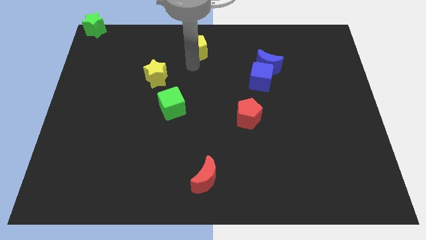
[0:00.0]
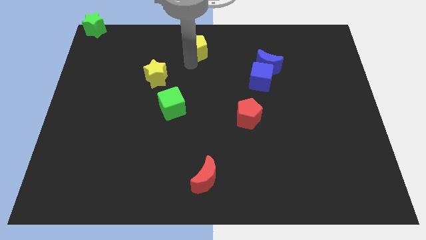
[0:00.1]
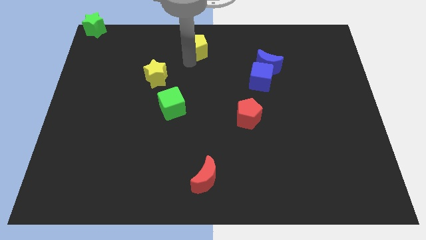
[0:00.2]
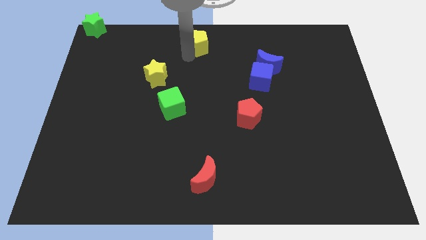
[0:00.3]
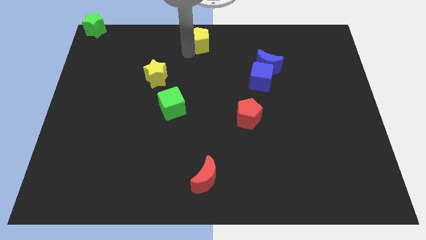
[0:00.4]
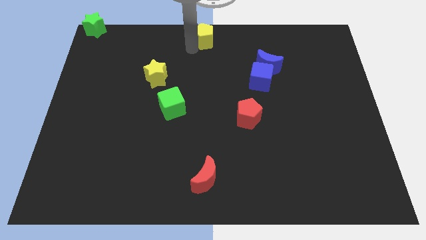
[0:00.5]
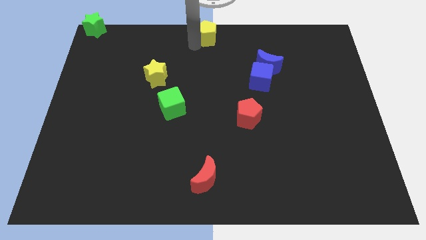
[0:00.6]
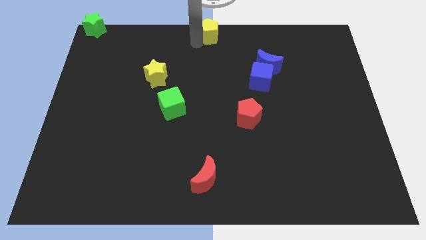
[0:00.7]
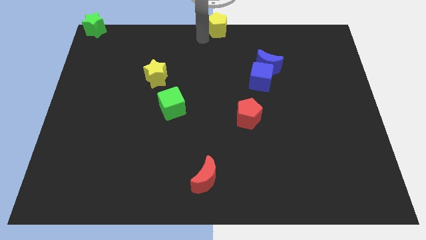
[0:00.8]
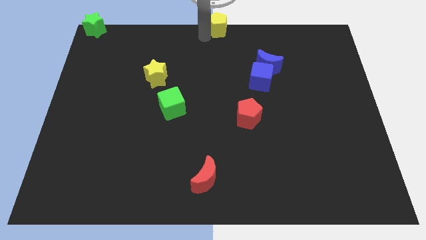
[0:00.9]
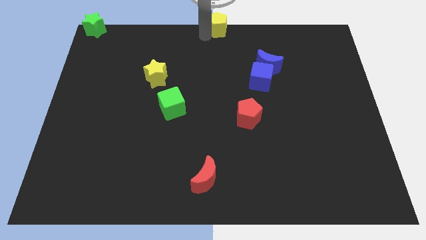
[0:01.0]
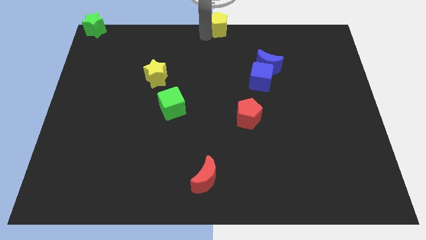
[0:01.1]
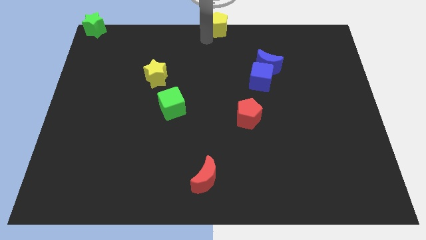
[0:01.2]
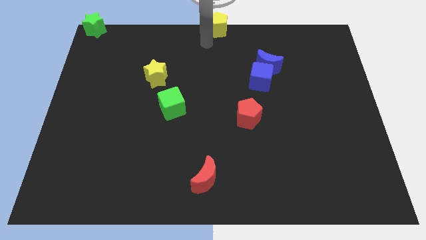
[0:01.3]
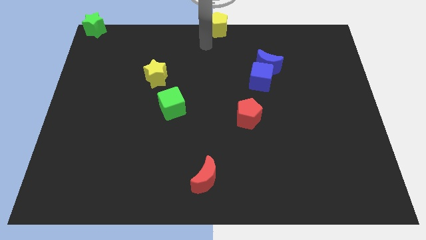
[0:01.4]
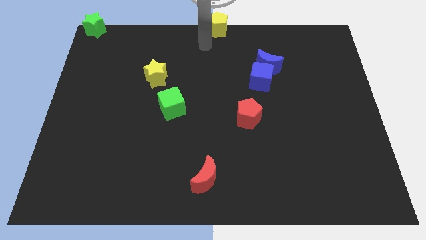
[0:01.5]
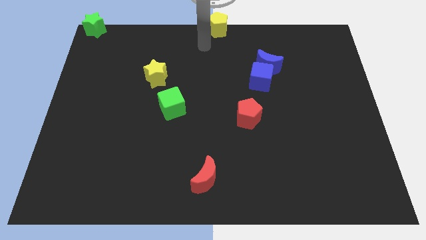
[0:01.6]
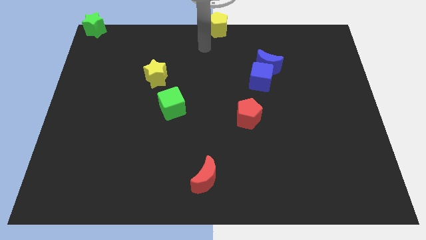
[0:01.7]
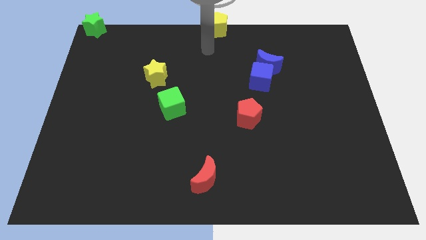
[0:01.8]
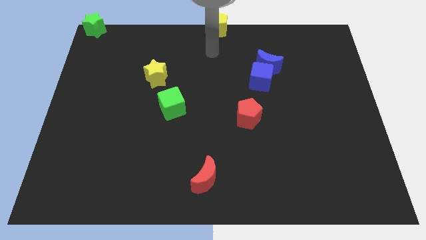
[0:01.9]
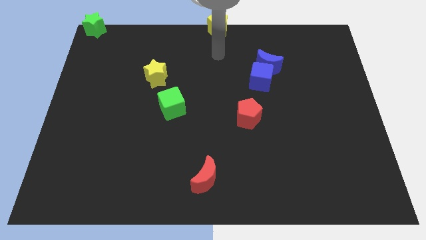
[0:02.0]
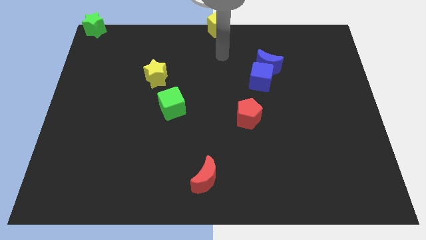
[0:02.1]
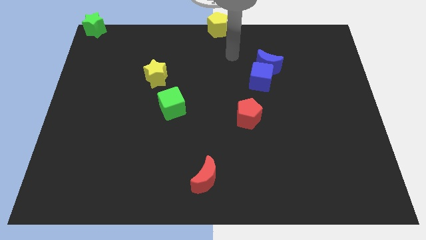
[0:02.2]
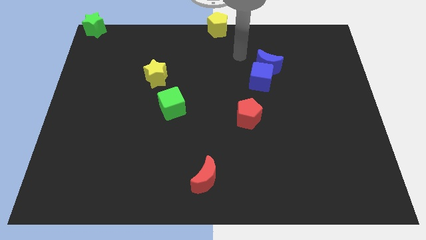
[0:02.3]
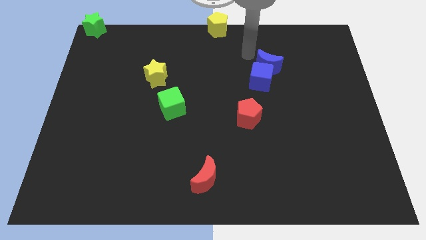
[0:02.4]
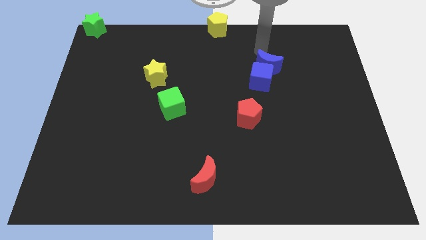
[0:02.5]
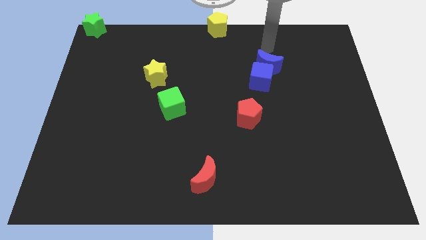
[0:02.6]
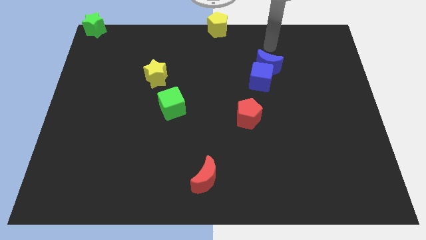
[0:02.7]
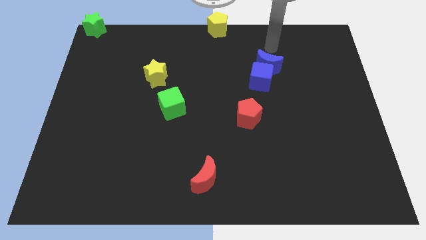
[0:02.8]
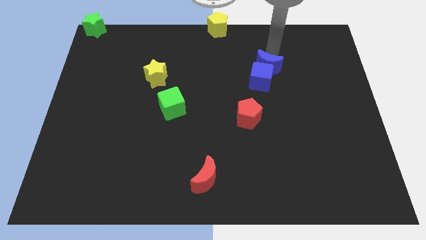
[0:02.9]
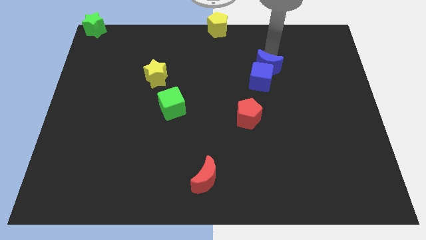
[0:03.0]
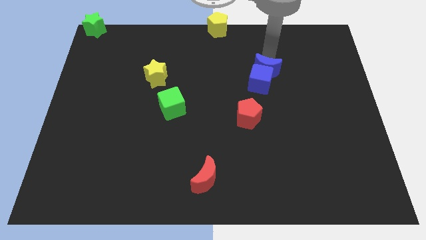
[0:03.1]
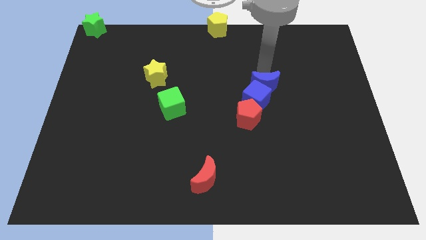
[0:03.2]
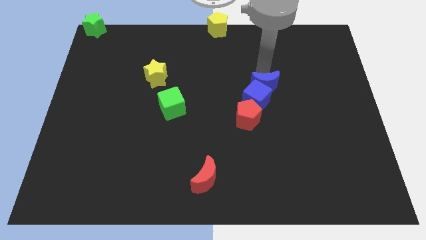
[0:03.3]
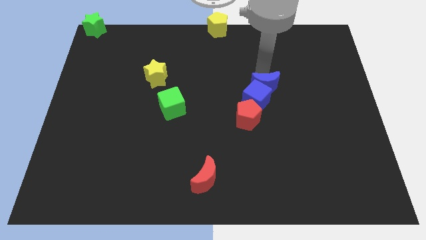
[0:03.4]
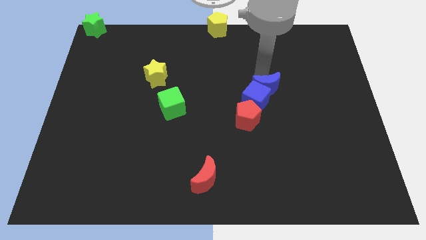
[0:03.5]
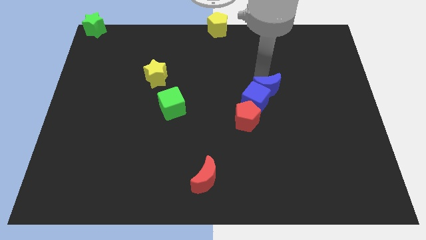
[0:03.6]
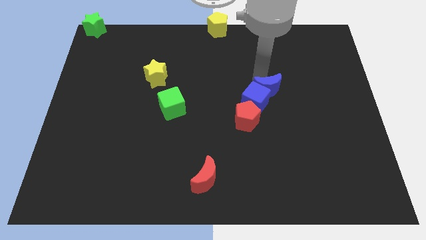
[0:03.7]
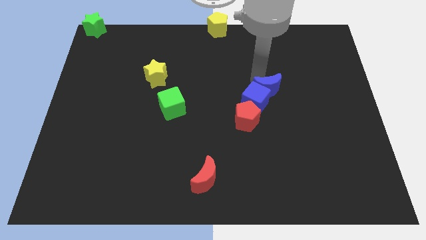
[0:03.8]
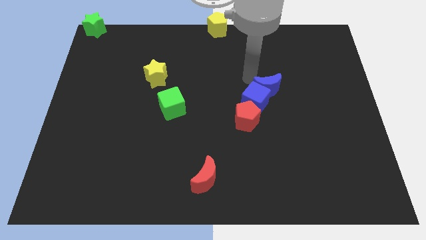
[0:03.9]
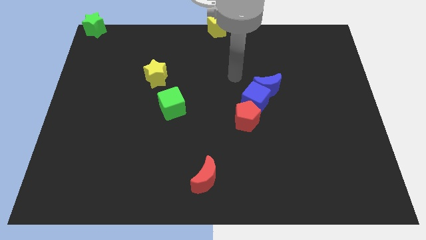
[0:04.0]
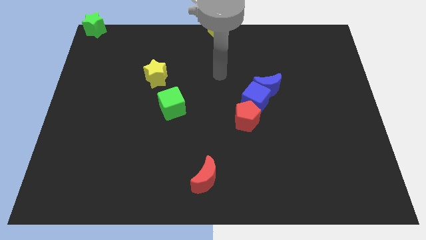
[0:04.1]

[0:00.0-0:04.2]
push the blue cube into the red pentagon with the blue moon

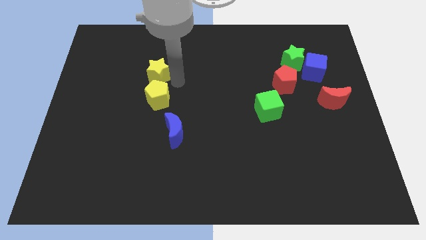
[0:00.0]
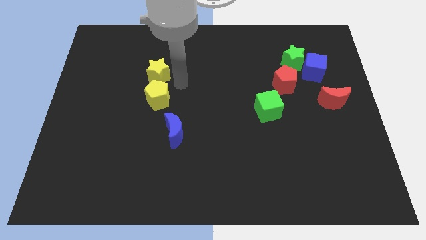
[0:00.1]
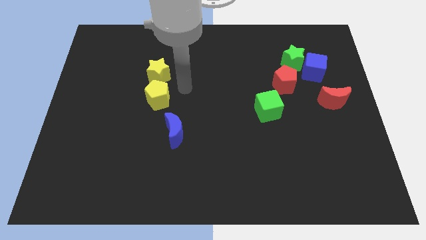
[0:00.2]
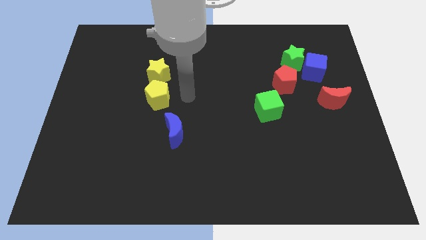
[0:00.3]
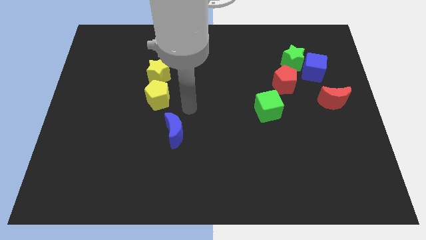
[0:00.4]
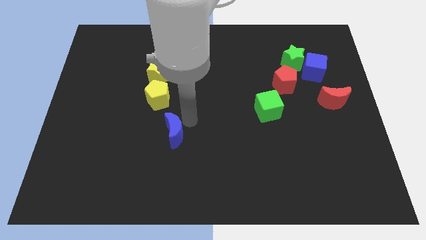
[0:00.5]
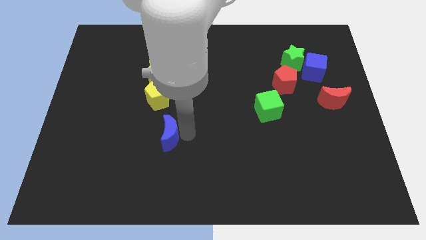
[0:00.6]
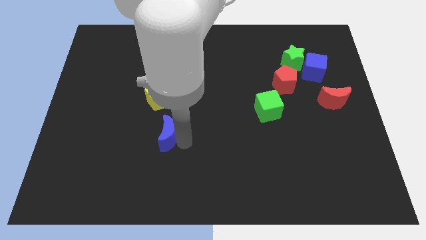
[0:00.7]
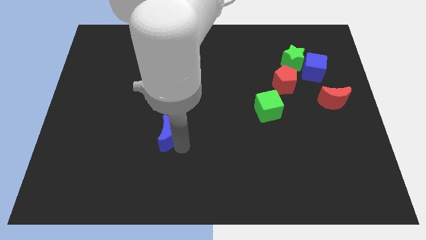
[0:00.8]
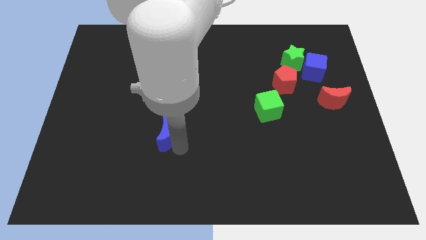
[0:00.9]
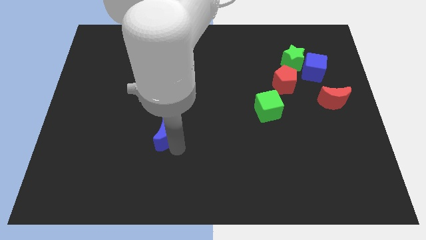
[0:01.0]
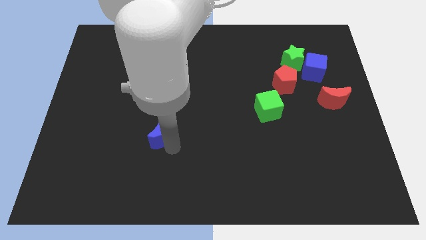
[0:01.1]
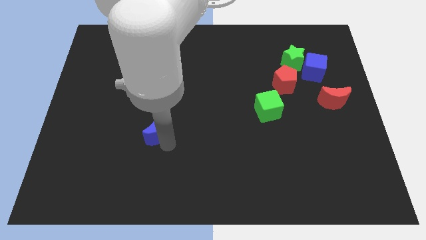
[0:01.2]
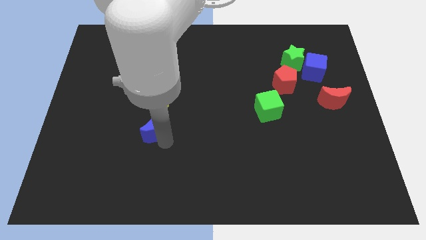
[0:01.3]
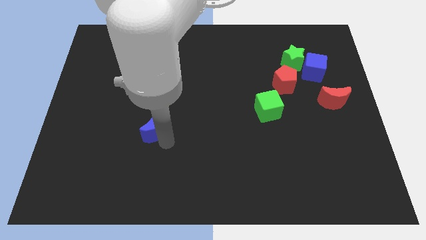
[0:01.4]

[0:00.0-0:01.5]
place the blue crescent below to the yellow pentagon

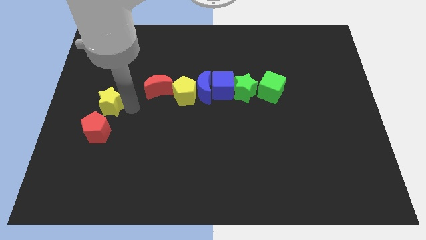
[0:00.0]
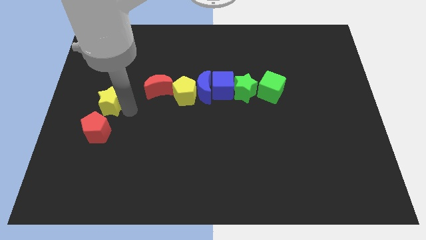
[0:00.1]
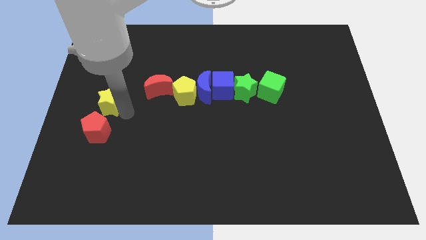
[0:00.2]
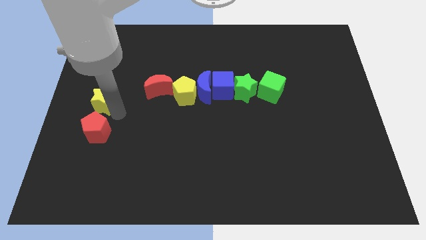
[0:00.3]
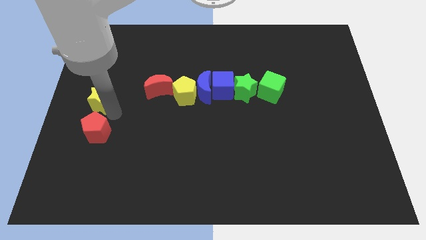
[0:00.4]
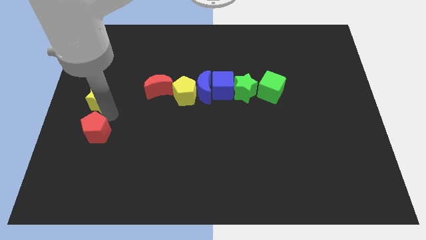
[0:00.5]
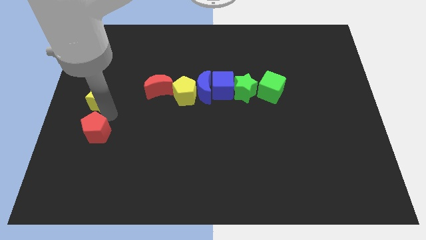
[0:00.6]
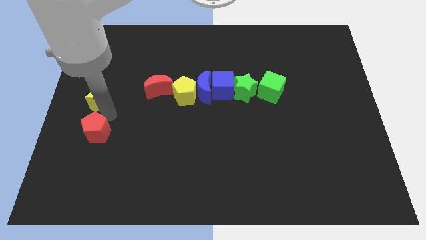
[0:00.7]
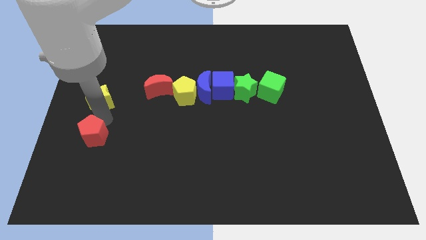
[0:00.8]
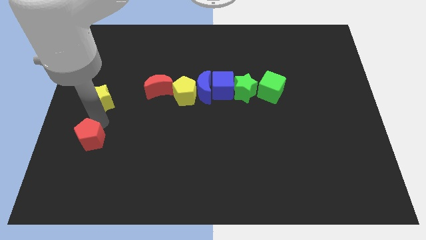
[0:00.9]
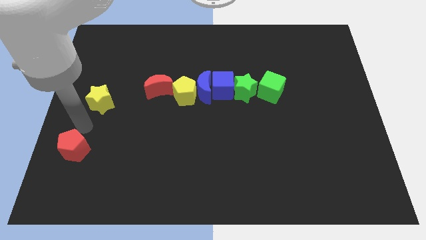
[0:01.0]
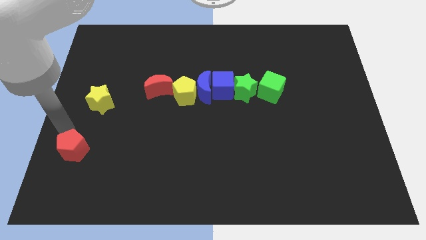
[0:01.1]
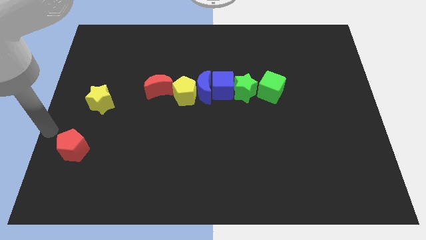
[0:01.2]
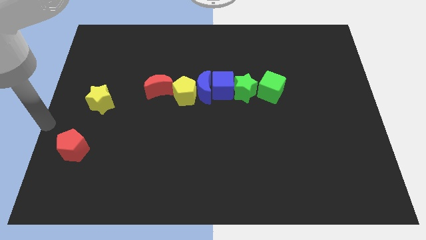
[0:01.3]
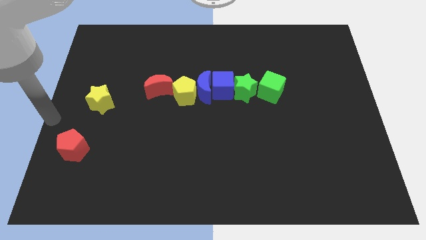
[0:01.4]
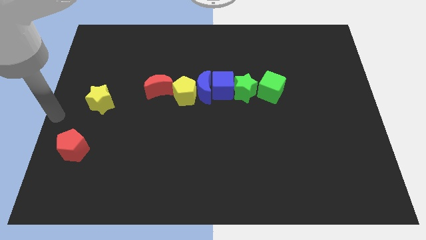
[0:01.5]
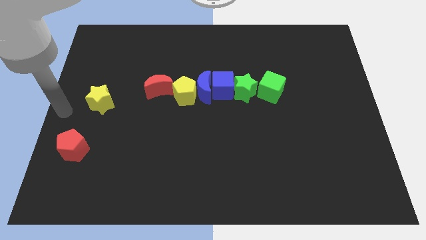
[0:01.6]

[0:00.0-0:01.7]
separate the yellow star and the red pentagon

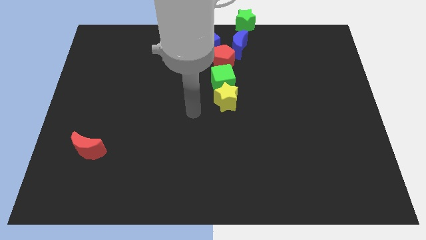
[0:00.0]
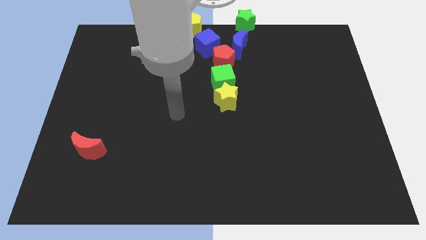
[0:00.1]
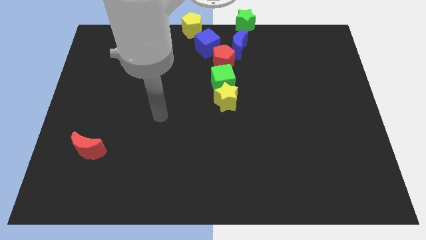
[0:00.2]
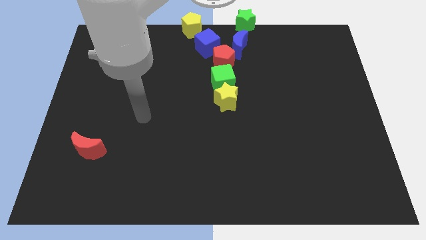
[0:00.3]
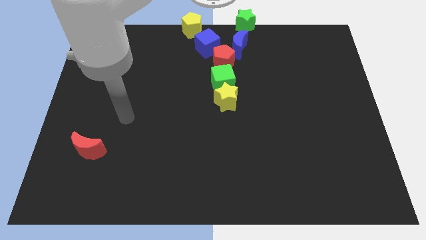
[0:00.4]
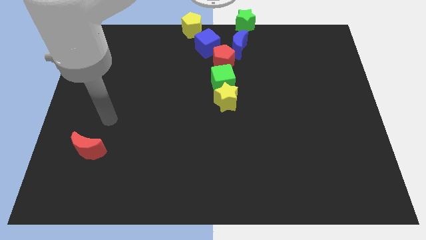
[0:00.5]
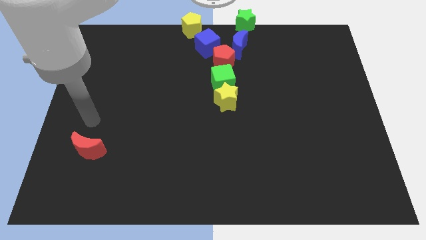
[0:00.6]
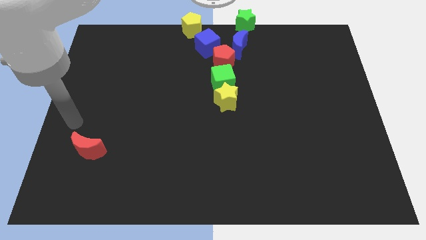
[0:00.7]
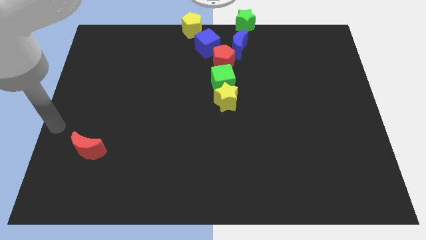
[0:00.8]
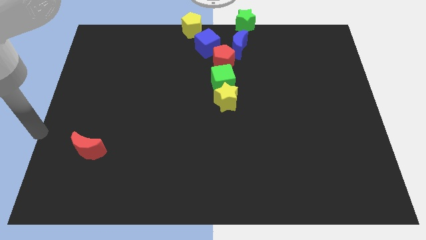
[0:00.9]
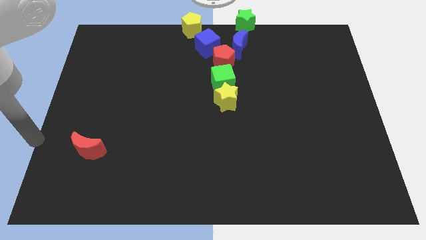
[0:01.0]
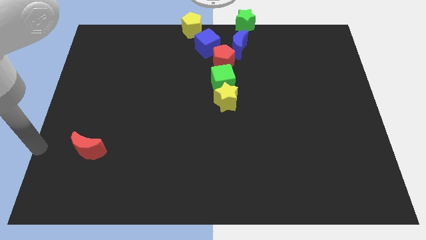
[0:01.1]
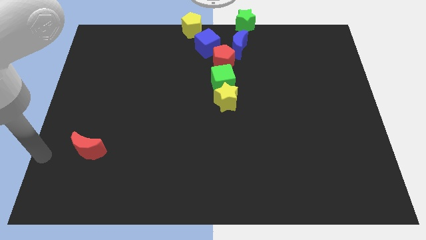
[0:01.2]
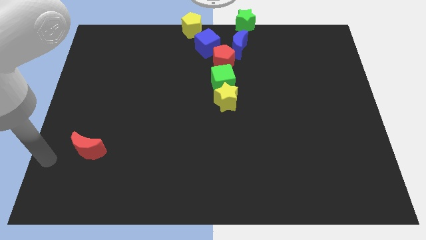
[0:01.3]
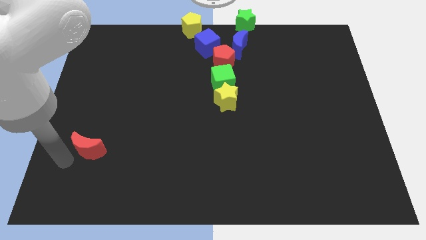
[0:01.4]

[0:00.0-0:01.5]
move the arm to the bottom left of the red moon

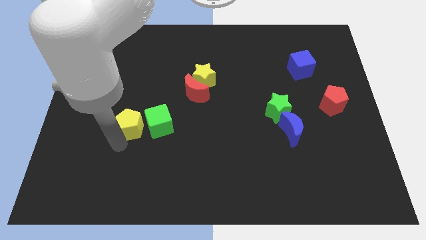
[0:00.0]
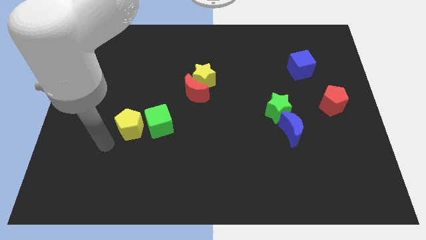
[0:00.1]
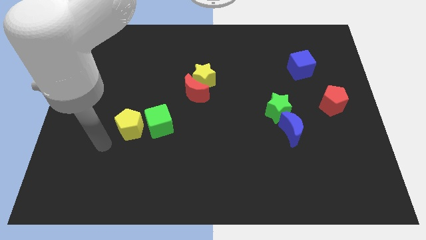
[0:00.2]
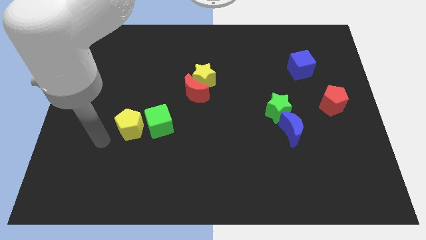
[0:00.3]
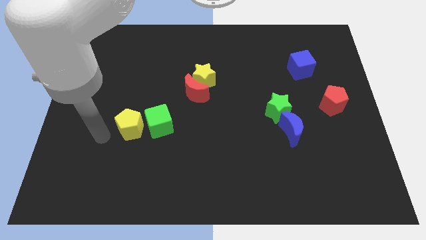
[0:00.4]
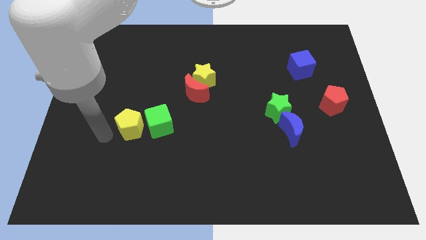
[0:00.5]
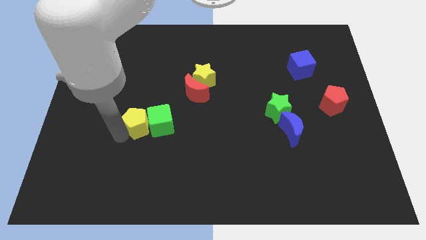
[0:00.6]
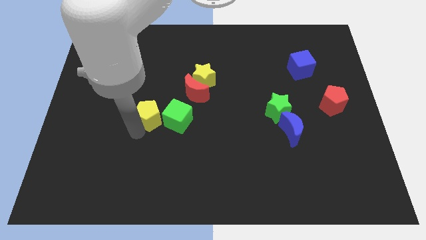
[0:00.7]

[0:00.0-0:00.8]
push the yellow pentagon into the green cube
